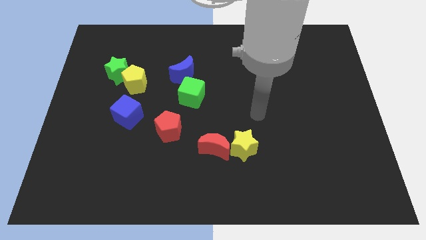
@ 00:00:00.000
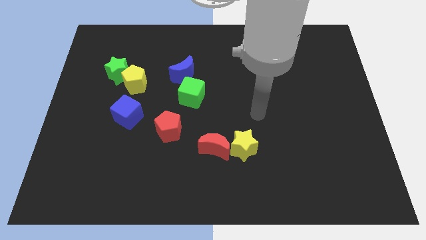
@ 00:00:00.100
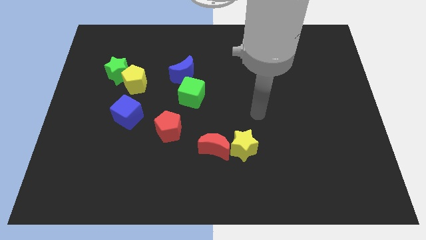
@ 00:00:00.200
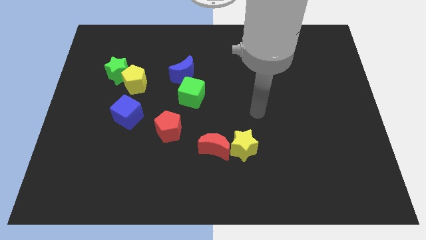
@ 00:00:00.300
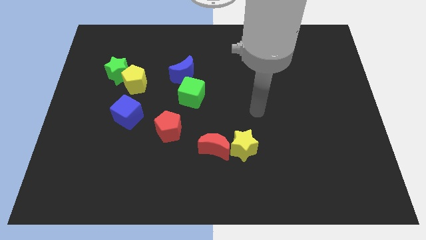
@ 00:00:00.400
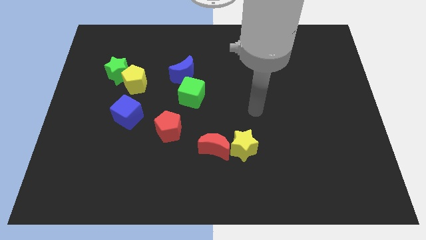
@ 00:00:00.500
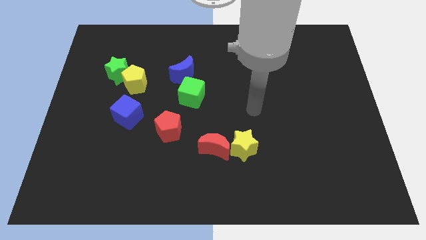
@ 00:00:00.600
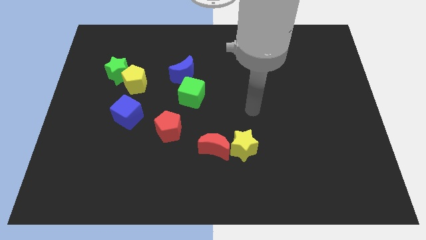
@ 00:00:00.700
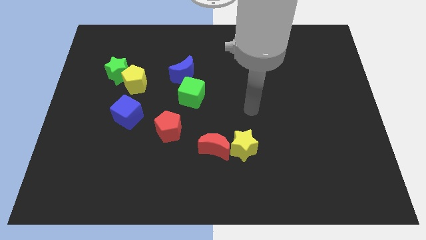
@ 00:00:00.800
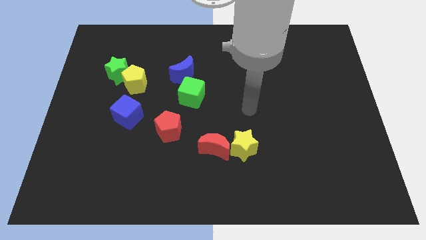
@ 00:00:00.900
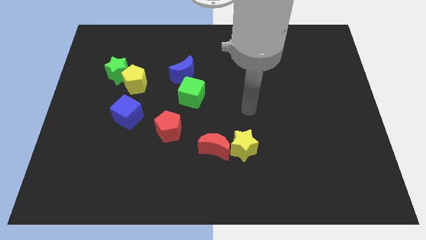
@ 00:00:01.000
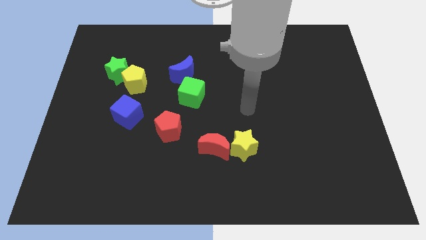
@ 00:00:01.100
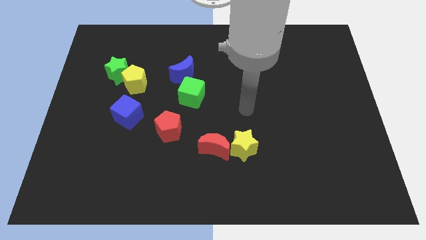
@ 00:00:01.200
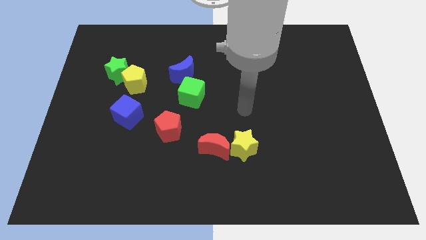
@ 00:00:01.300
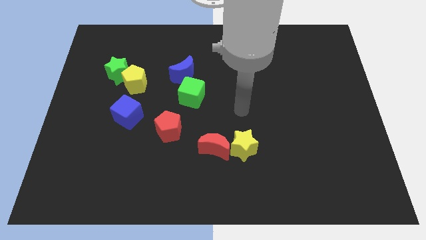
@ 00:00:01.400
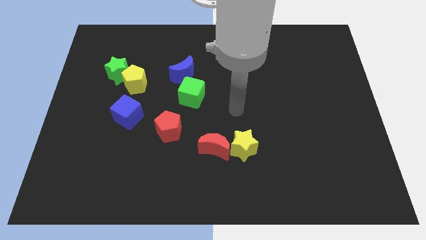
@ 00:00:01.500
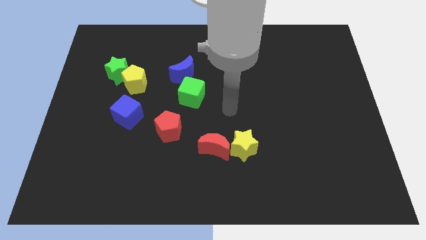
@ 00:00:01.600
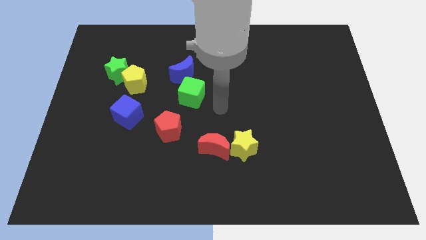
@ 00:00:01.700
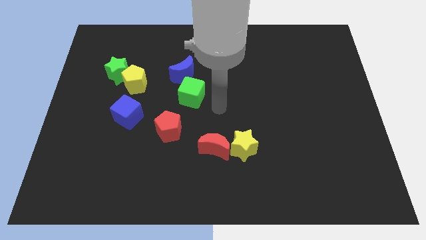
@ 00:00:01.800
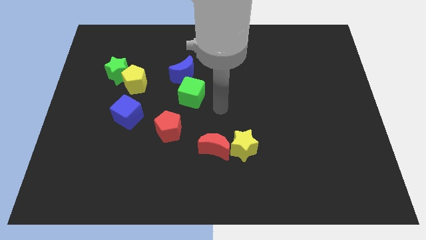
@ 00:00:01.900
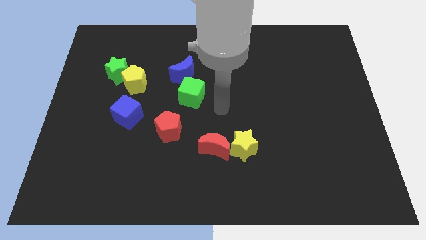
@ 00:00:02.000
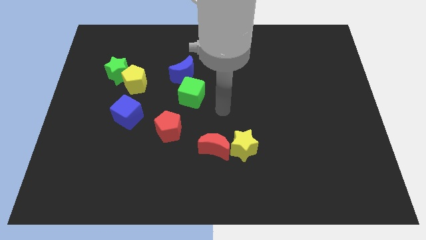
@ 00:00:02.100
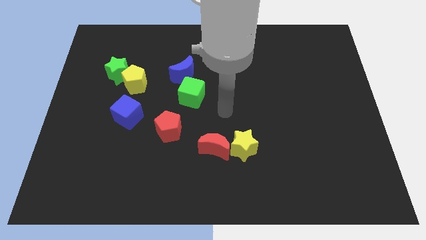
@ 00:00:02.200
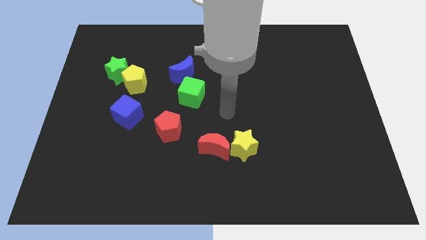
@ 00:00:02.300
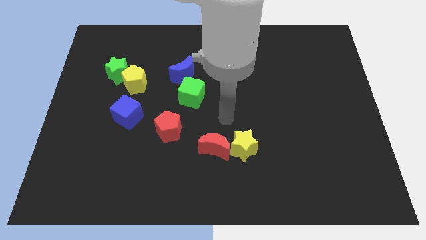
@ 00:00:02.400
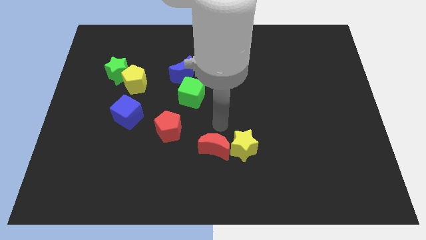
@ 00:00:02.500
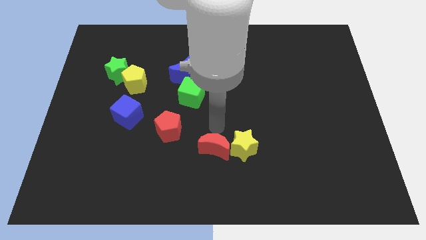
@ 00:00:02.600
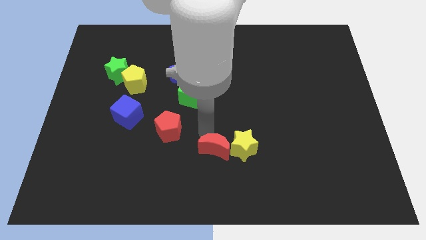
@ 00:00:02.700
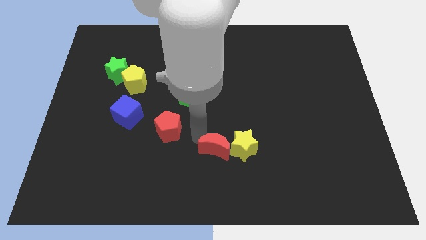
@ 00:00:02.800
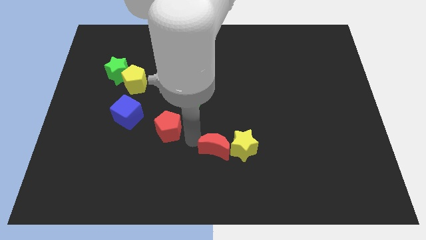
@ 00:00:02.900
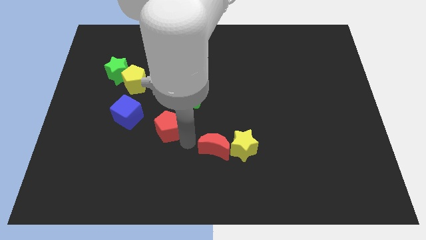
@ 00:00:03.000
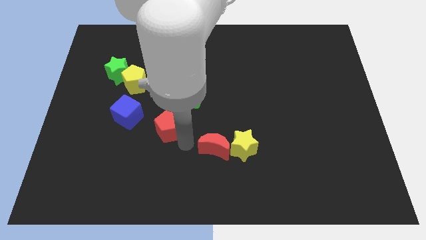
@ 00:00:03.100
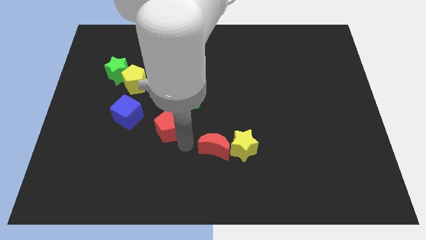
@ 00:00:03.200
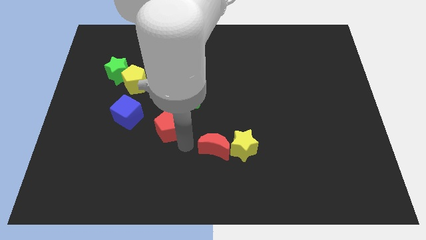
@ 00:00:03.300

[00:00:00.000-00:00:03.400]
move your arm towards the red crescent

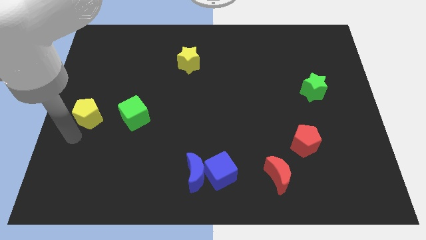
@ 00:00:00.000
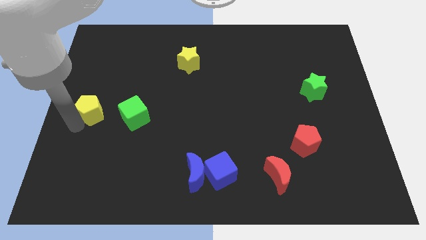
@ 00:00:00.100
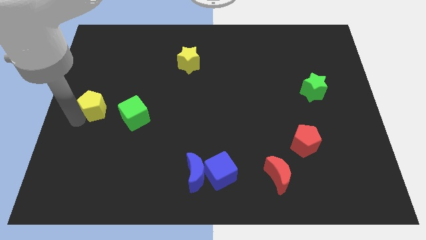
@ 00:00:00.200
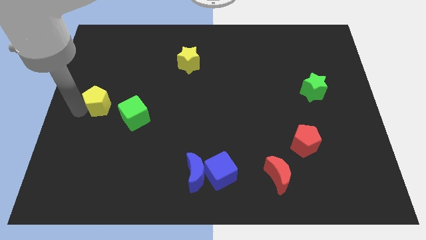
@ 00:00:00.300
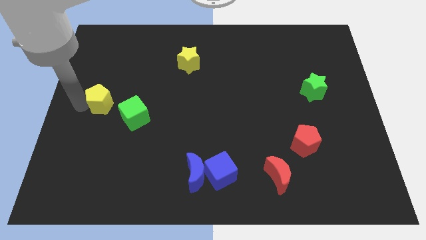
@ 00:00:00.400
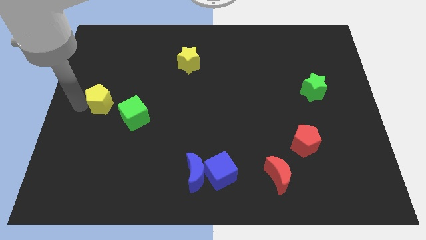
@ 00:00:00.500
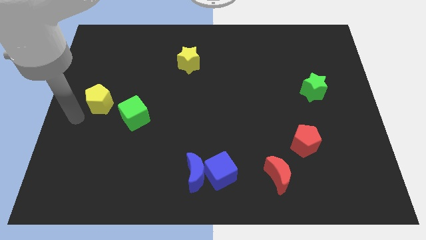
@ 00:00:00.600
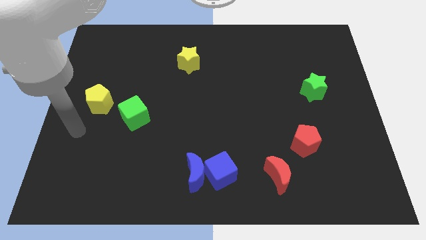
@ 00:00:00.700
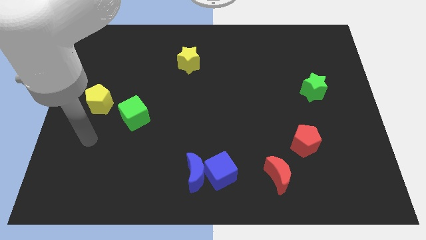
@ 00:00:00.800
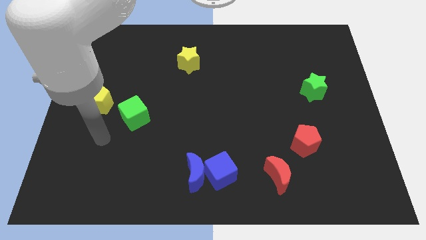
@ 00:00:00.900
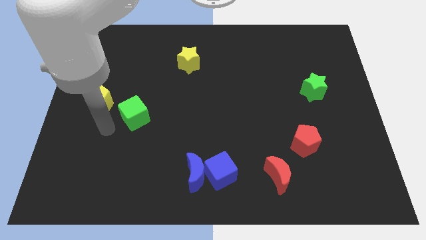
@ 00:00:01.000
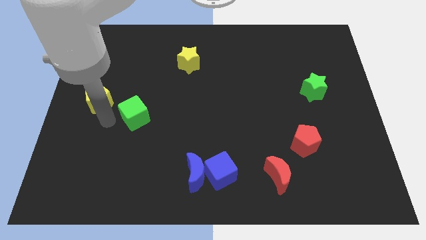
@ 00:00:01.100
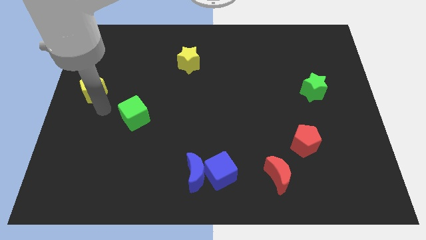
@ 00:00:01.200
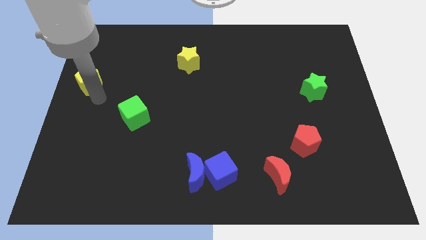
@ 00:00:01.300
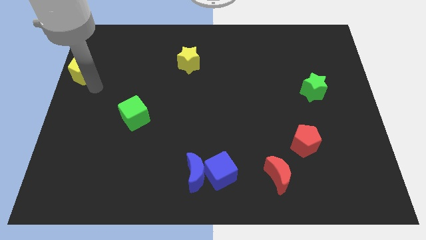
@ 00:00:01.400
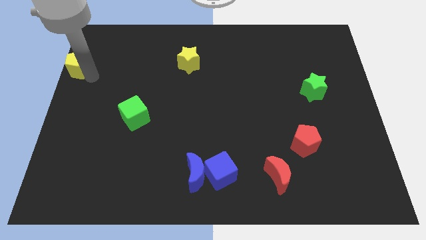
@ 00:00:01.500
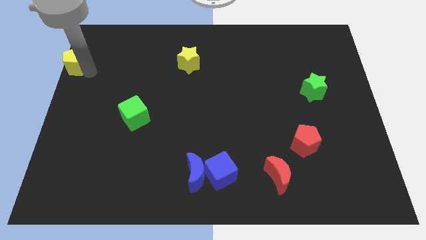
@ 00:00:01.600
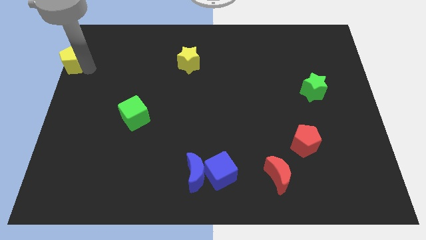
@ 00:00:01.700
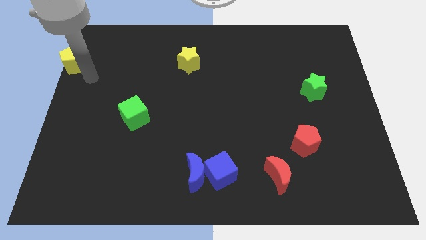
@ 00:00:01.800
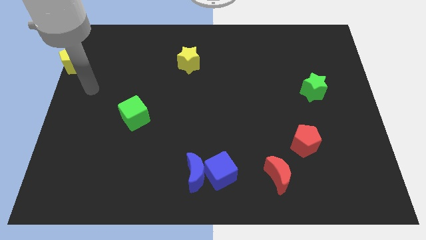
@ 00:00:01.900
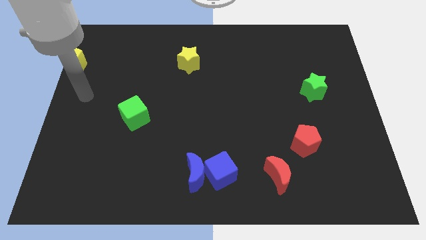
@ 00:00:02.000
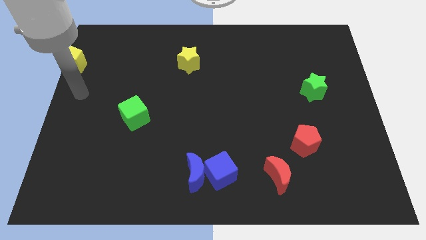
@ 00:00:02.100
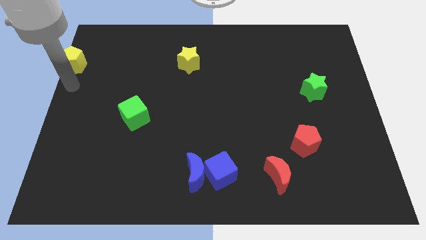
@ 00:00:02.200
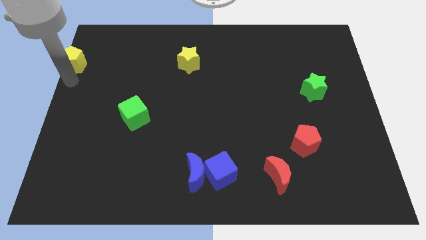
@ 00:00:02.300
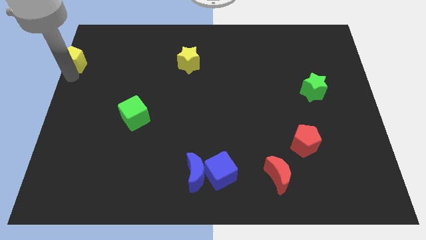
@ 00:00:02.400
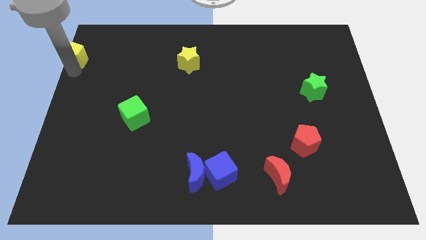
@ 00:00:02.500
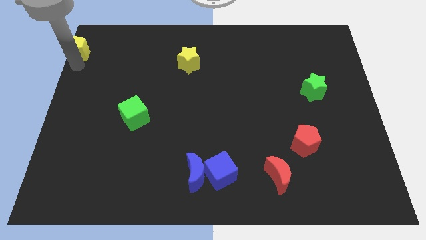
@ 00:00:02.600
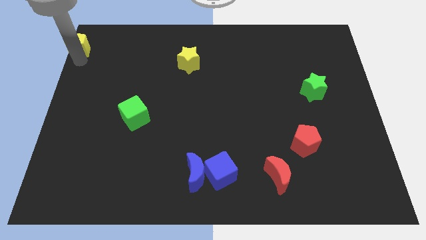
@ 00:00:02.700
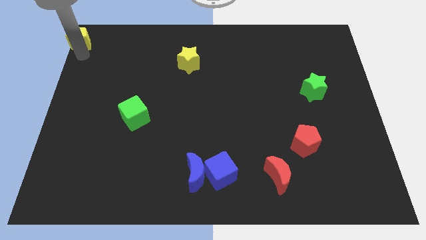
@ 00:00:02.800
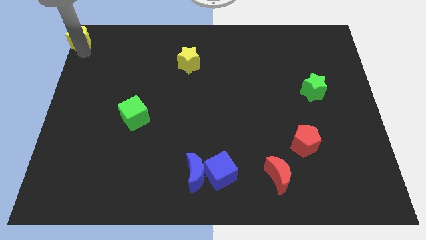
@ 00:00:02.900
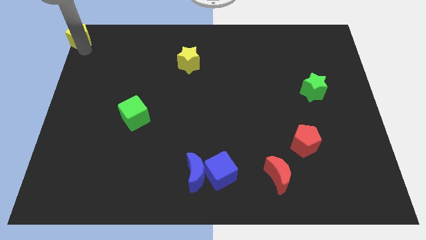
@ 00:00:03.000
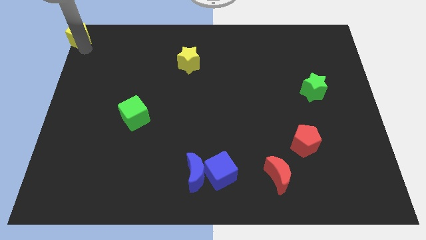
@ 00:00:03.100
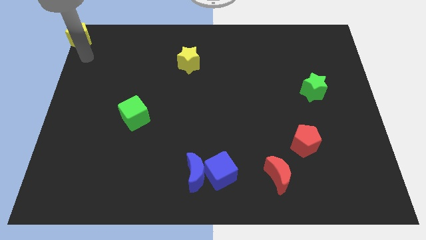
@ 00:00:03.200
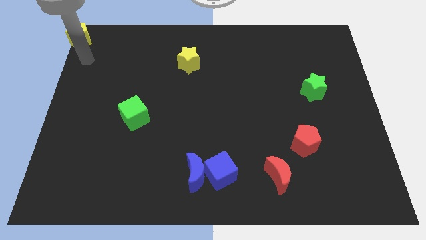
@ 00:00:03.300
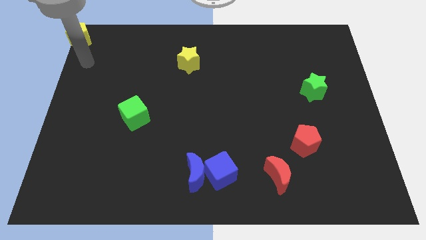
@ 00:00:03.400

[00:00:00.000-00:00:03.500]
move the yellow pentagon to the top left

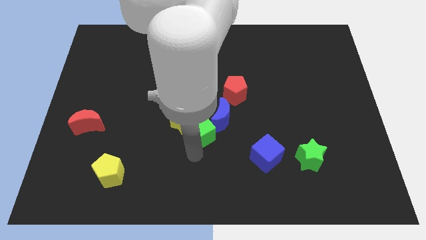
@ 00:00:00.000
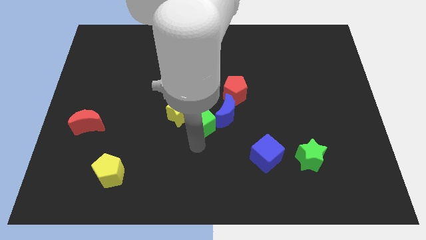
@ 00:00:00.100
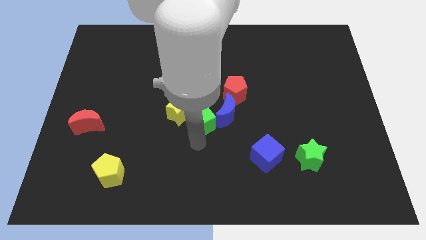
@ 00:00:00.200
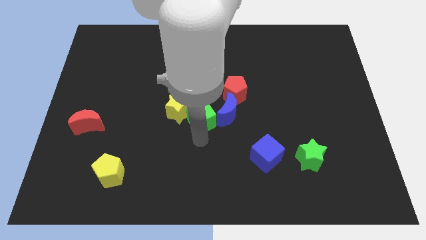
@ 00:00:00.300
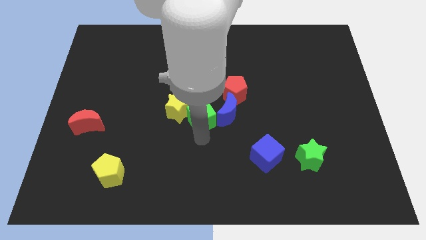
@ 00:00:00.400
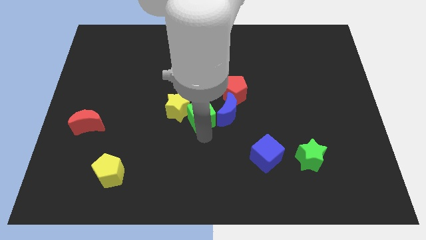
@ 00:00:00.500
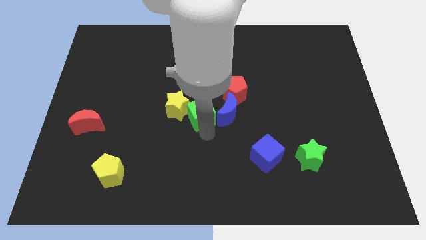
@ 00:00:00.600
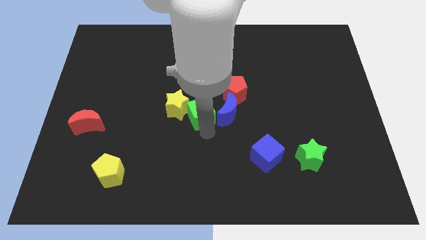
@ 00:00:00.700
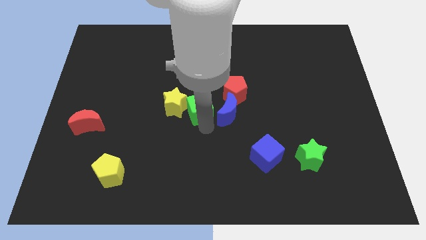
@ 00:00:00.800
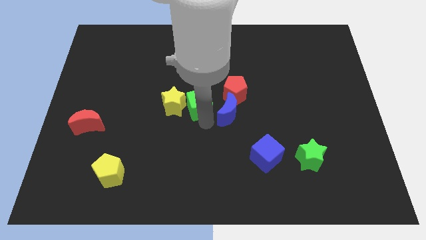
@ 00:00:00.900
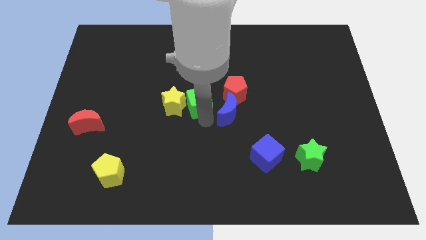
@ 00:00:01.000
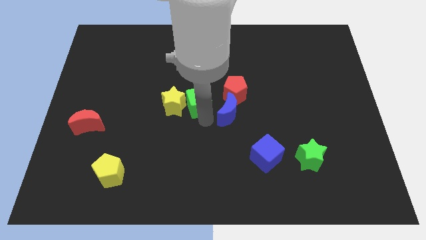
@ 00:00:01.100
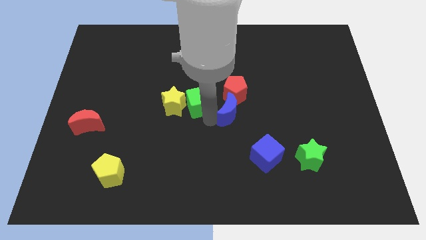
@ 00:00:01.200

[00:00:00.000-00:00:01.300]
push the green cube into the yellow star

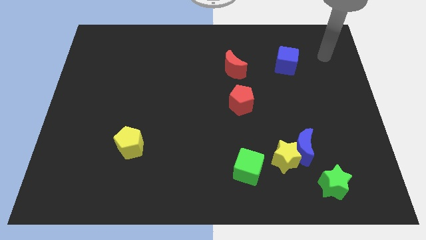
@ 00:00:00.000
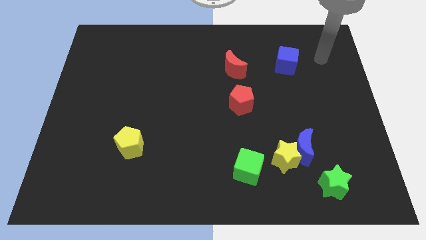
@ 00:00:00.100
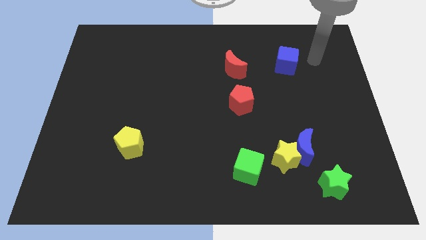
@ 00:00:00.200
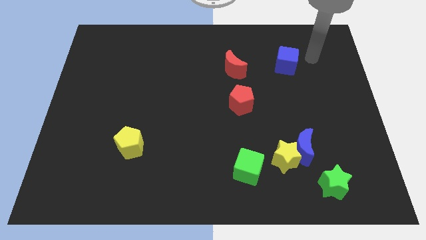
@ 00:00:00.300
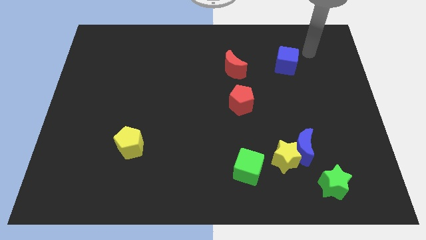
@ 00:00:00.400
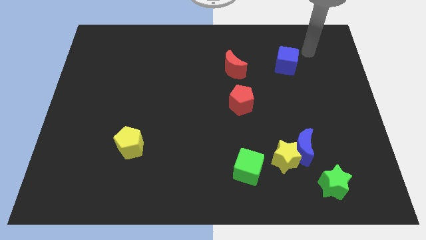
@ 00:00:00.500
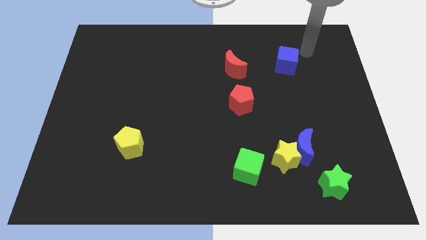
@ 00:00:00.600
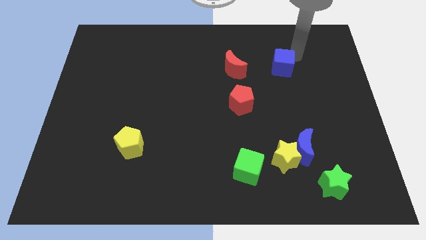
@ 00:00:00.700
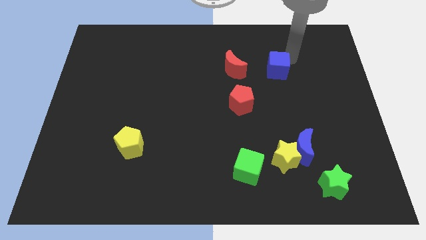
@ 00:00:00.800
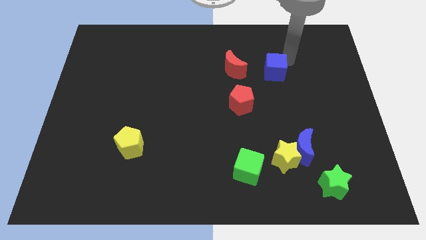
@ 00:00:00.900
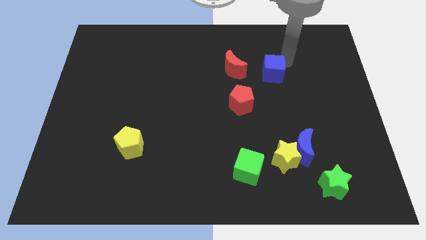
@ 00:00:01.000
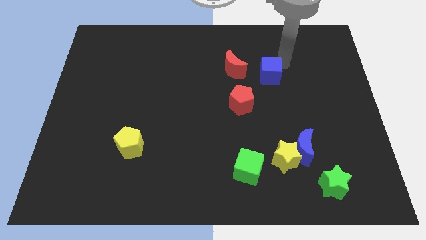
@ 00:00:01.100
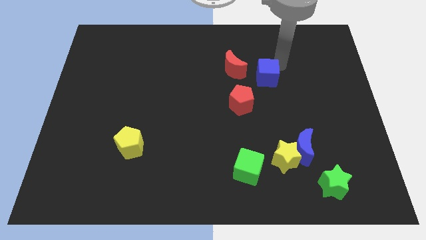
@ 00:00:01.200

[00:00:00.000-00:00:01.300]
move the blue cube to the right of the red crescent
